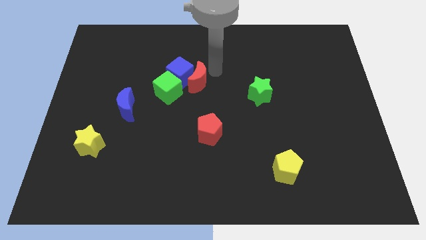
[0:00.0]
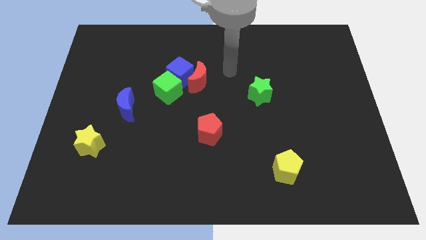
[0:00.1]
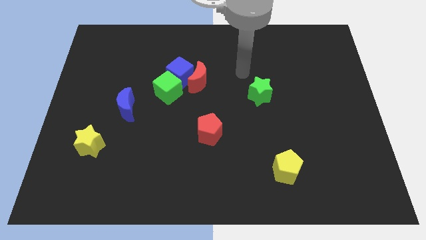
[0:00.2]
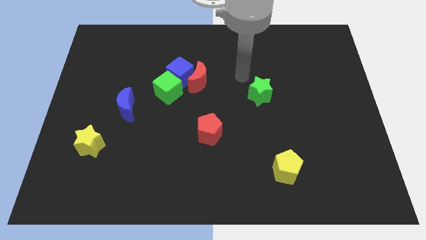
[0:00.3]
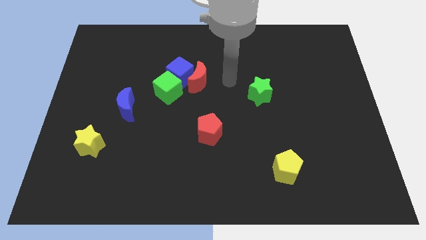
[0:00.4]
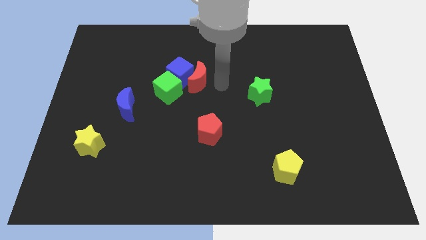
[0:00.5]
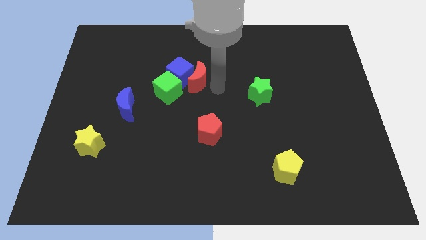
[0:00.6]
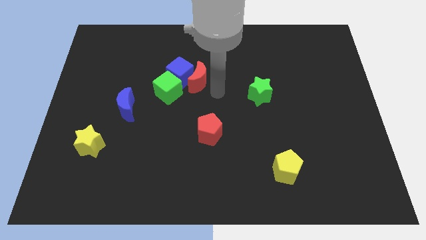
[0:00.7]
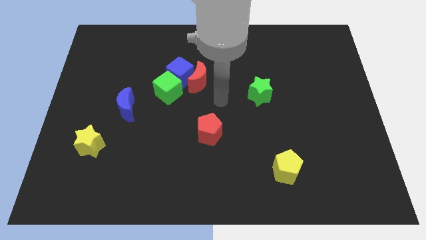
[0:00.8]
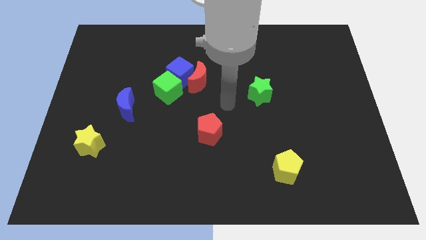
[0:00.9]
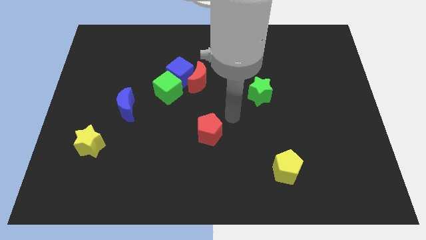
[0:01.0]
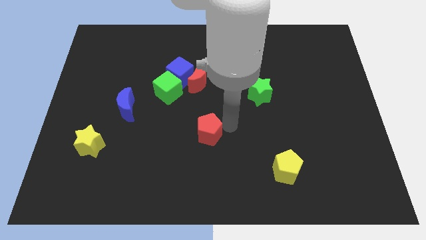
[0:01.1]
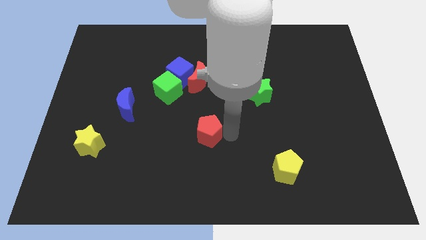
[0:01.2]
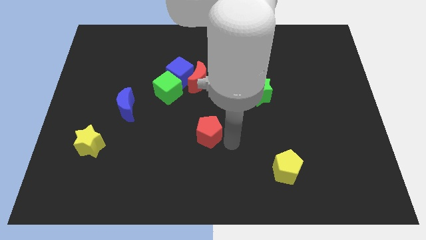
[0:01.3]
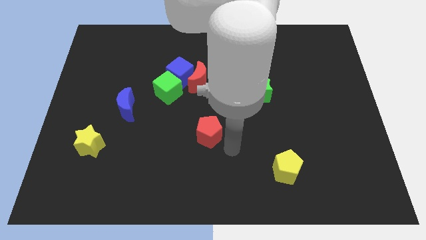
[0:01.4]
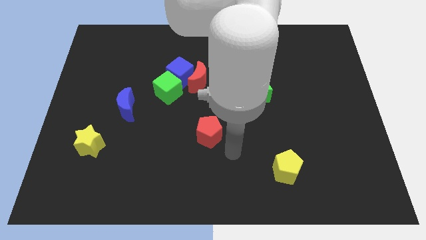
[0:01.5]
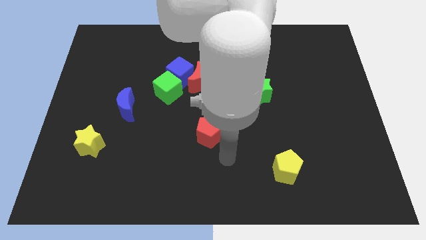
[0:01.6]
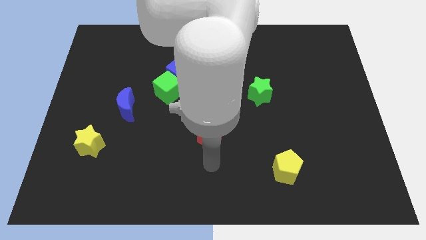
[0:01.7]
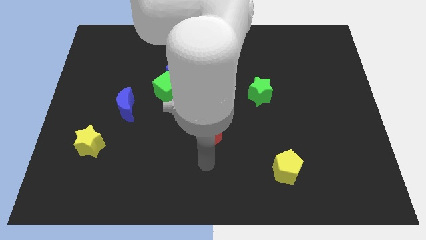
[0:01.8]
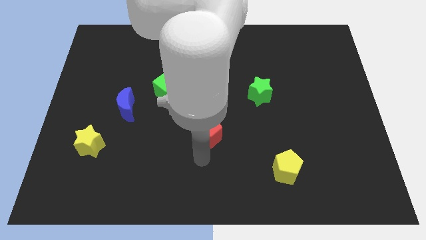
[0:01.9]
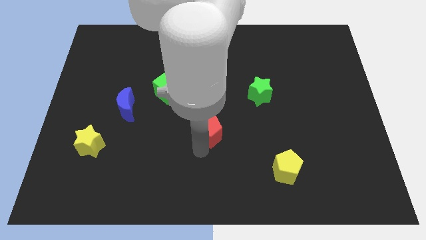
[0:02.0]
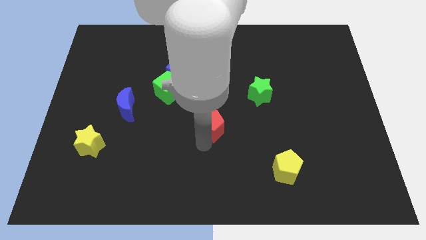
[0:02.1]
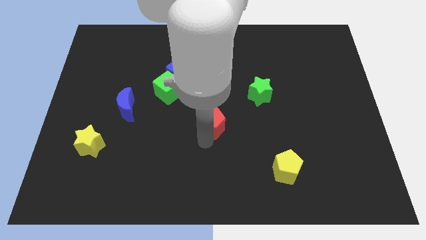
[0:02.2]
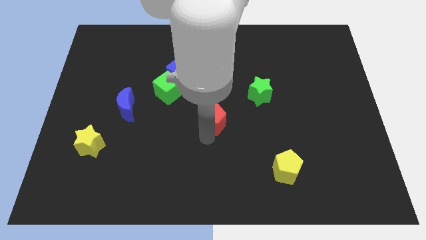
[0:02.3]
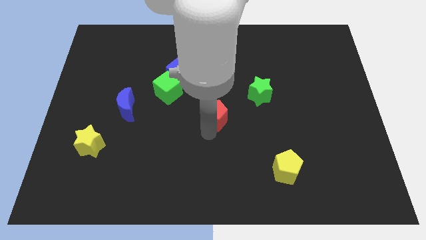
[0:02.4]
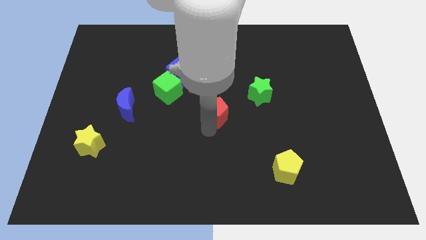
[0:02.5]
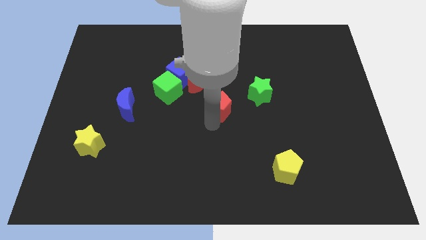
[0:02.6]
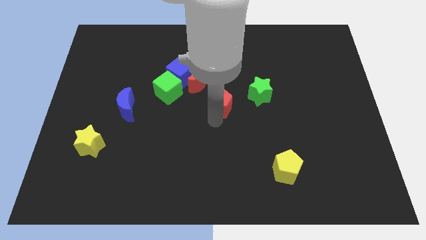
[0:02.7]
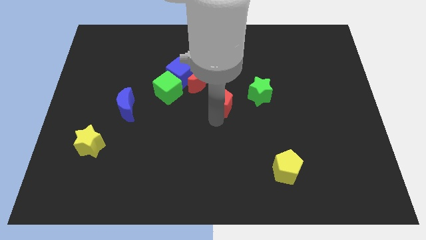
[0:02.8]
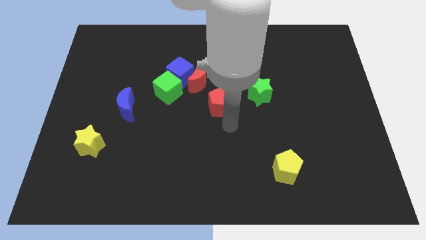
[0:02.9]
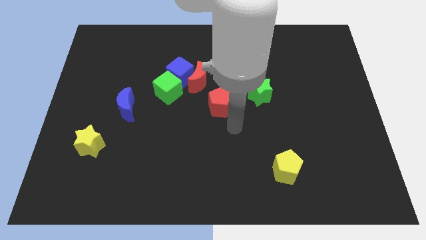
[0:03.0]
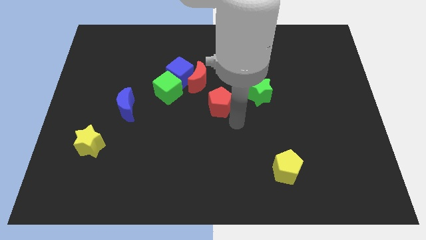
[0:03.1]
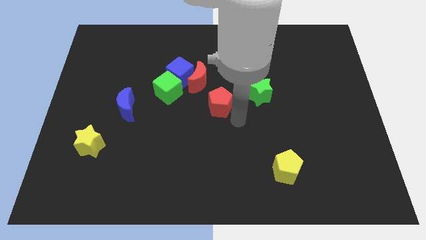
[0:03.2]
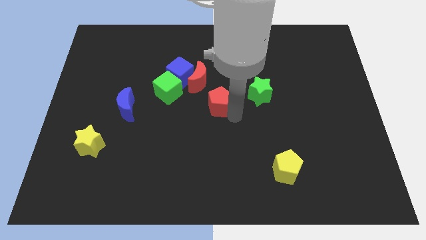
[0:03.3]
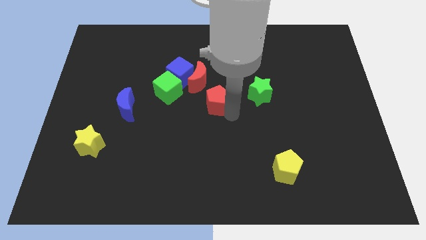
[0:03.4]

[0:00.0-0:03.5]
push the red pentagon to the left of the green star

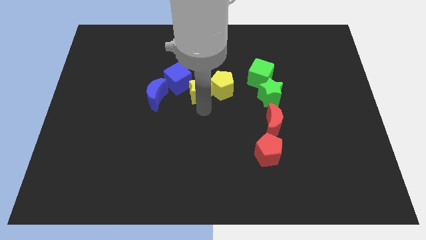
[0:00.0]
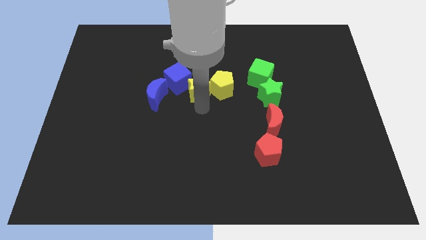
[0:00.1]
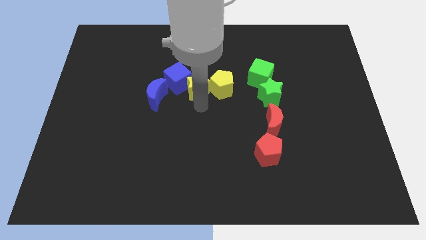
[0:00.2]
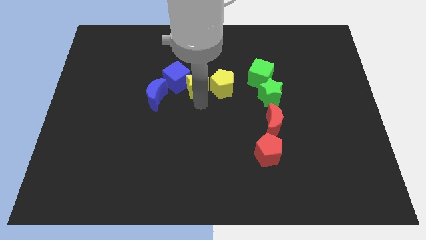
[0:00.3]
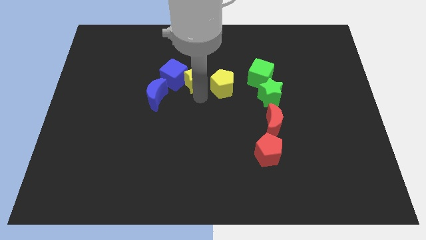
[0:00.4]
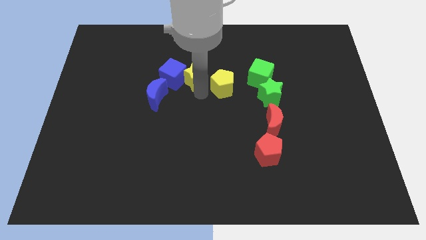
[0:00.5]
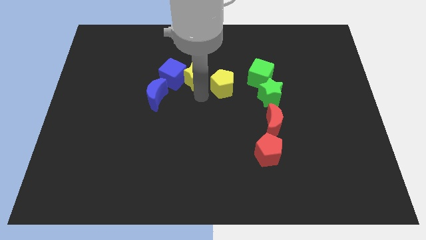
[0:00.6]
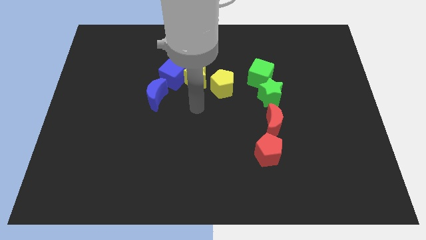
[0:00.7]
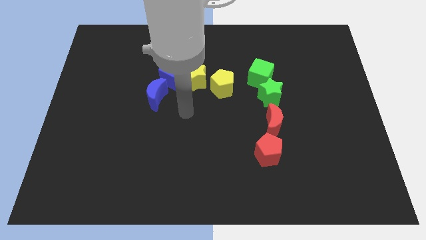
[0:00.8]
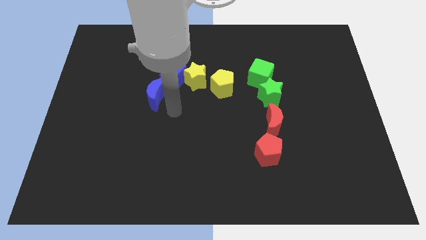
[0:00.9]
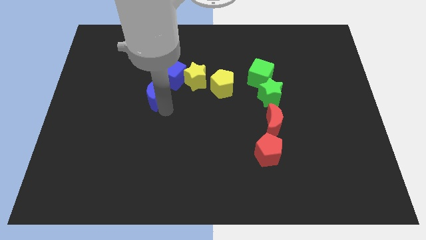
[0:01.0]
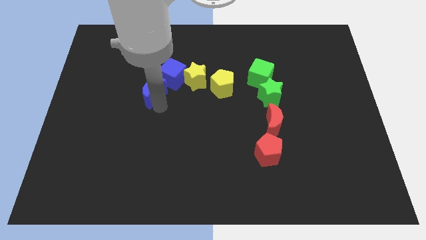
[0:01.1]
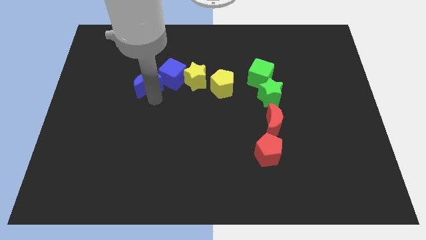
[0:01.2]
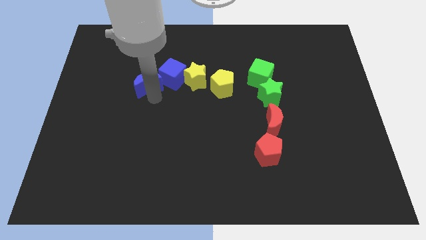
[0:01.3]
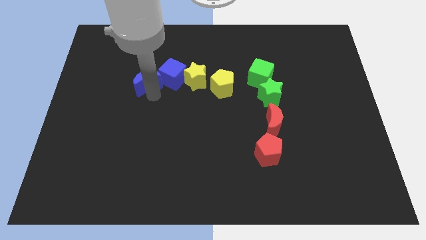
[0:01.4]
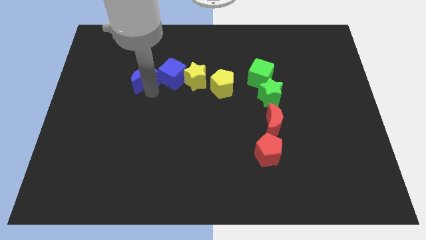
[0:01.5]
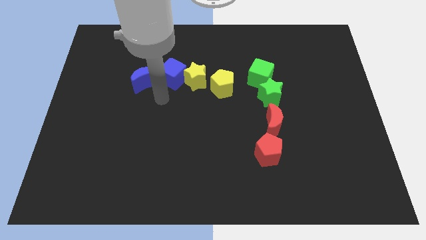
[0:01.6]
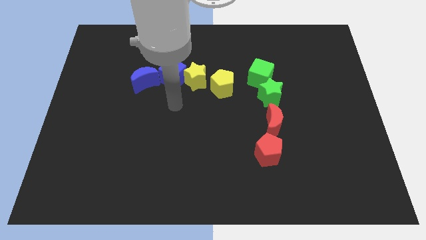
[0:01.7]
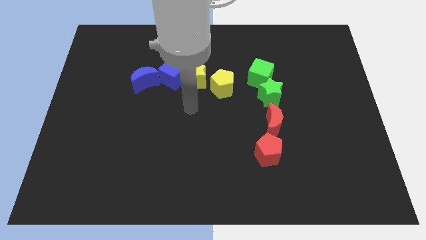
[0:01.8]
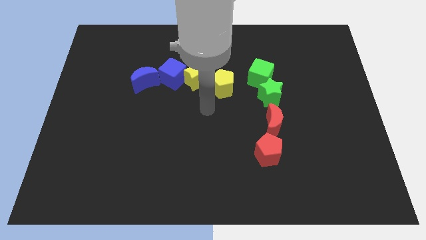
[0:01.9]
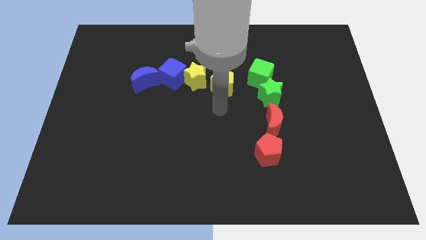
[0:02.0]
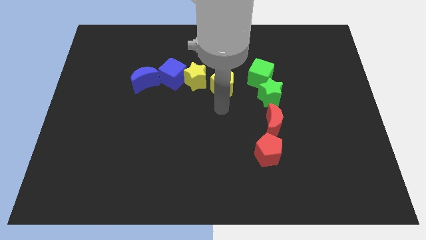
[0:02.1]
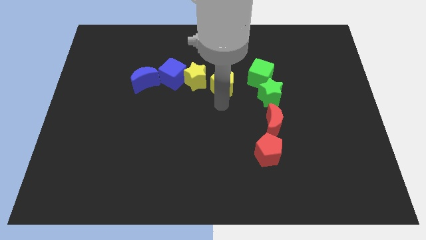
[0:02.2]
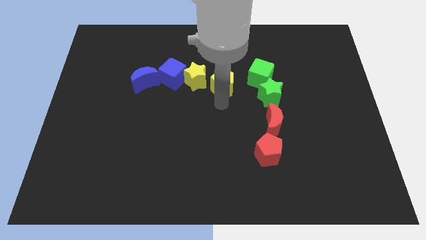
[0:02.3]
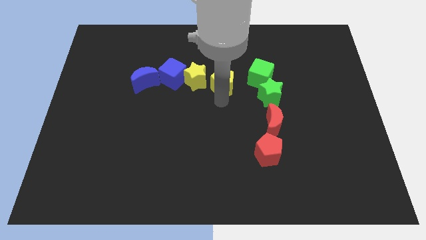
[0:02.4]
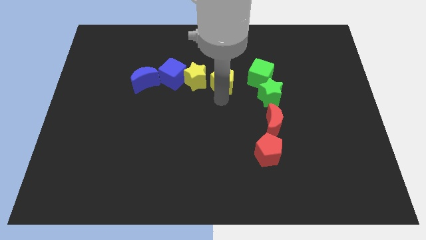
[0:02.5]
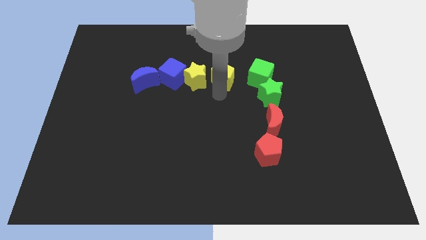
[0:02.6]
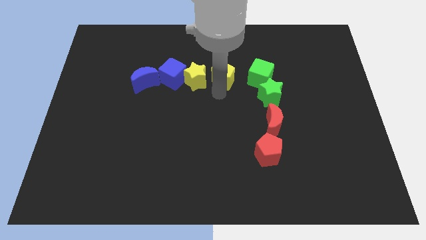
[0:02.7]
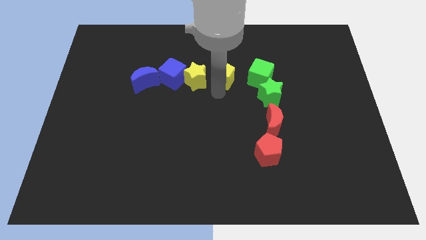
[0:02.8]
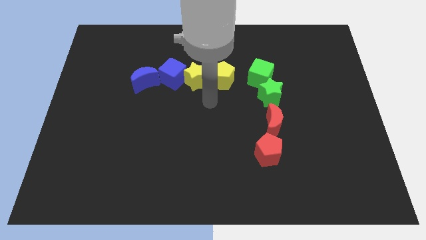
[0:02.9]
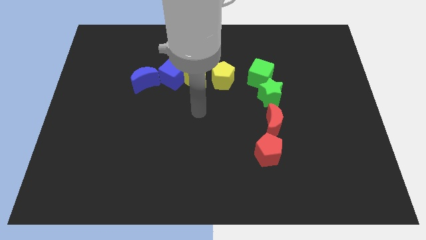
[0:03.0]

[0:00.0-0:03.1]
adjust yellow and blue blocks to make a horizontal line

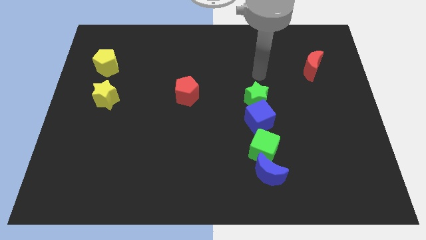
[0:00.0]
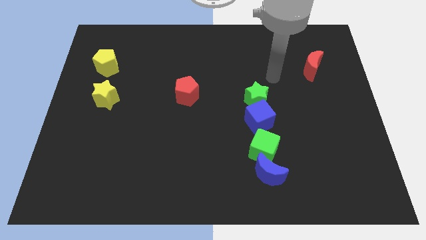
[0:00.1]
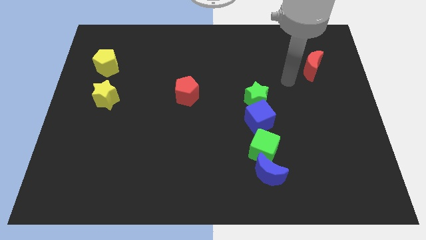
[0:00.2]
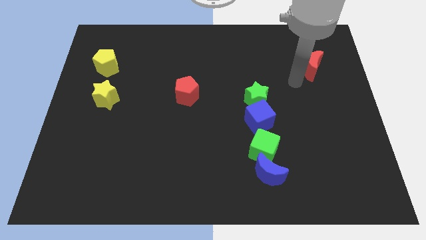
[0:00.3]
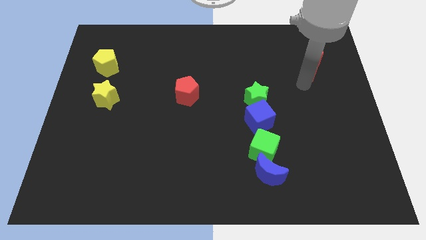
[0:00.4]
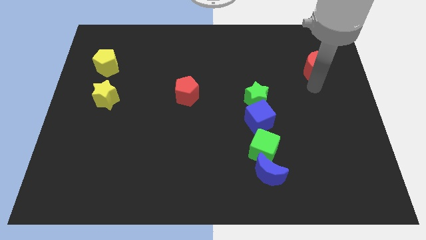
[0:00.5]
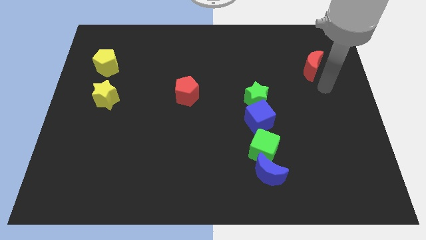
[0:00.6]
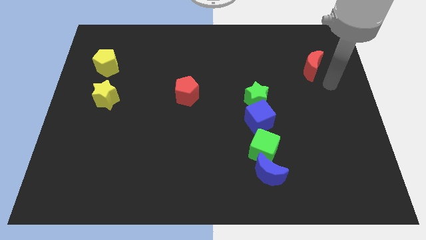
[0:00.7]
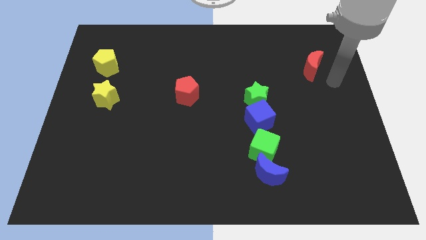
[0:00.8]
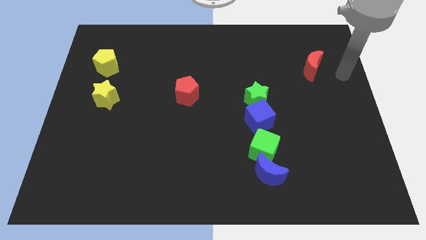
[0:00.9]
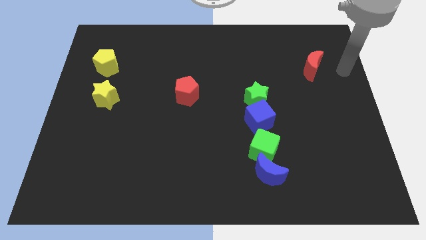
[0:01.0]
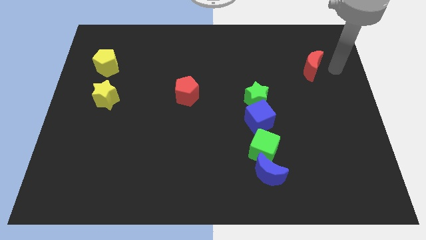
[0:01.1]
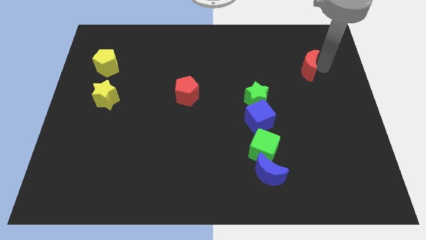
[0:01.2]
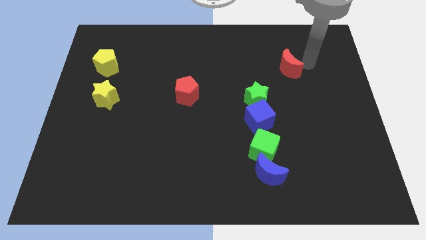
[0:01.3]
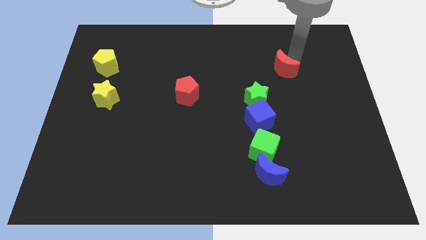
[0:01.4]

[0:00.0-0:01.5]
place the red moon diagonally top right to the green star

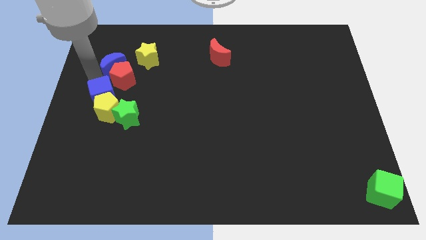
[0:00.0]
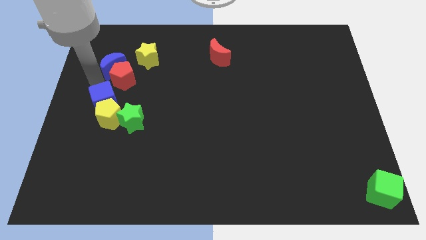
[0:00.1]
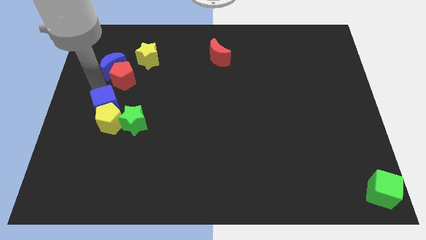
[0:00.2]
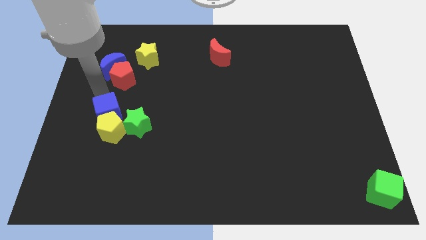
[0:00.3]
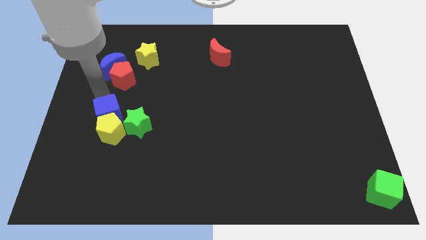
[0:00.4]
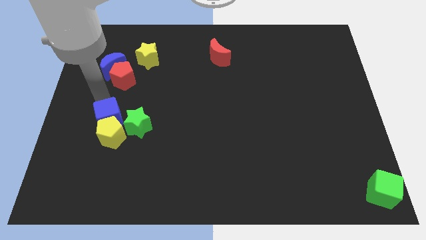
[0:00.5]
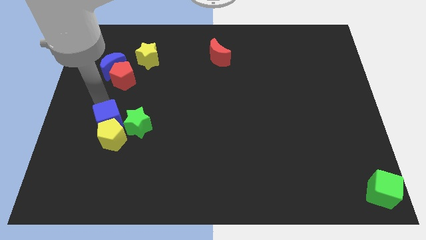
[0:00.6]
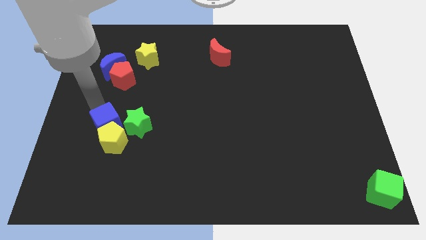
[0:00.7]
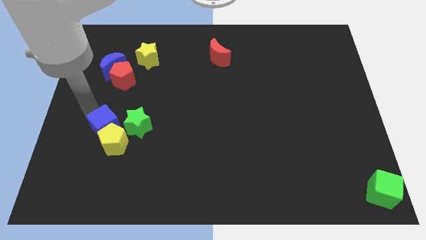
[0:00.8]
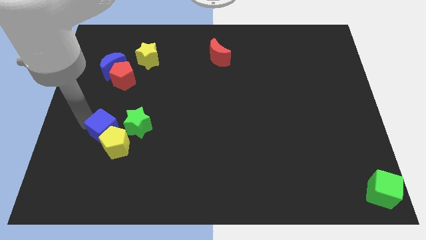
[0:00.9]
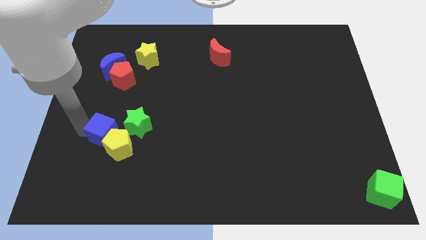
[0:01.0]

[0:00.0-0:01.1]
push the blue cube along with the yellow pentagon downwards
